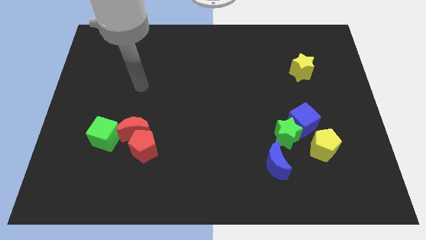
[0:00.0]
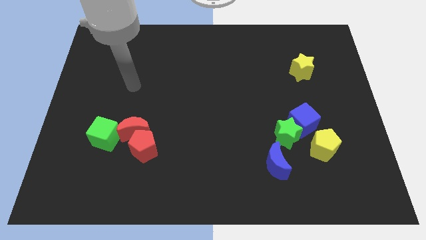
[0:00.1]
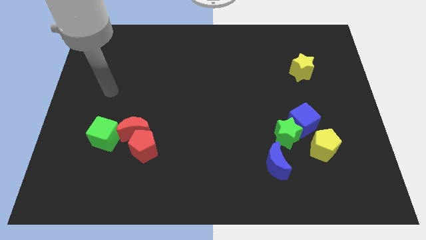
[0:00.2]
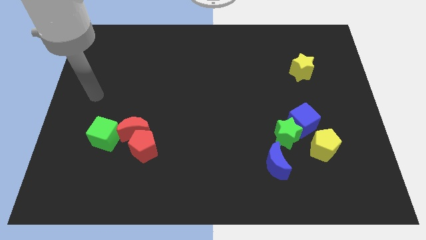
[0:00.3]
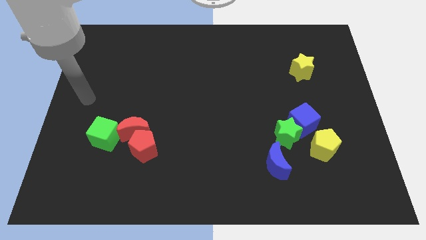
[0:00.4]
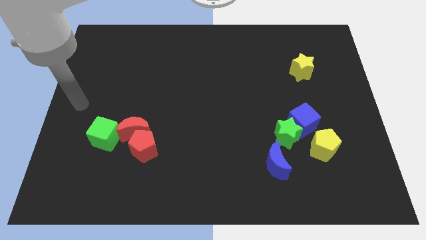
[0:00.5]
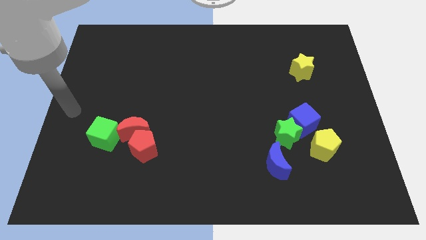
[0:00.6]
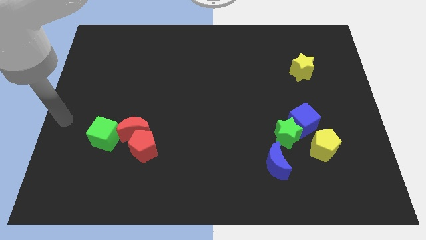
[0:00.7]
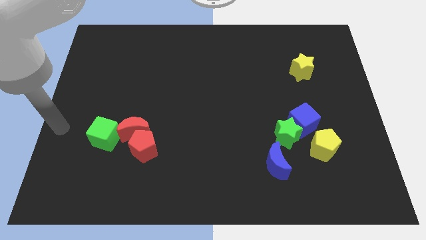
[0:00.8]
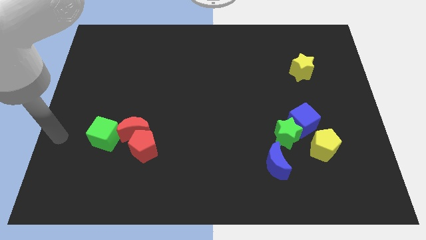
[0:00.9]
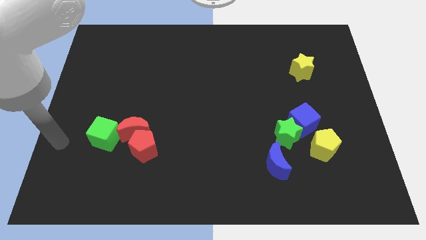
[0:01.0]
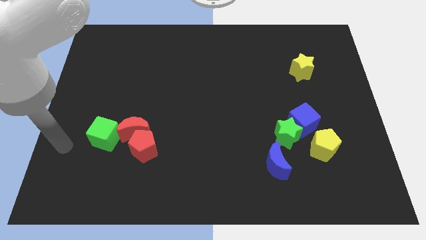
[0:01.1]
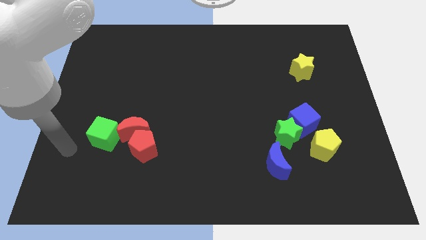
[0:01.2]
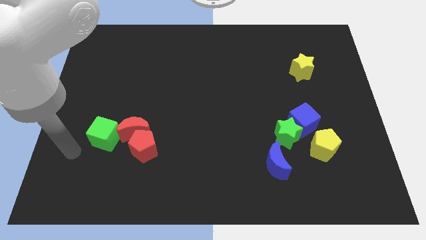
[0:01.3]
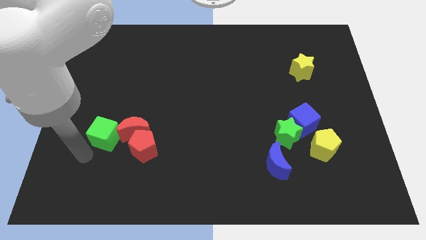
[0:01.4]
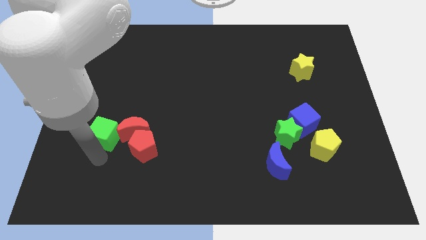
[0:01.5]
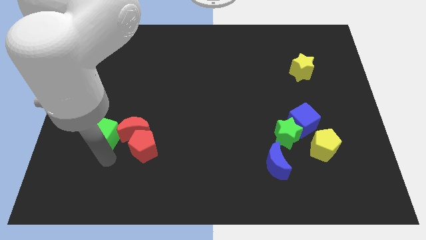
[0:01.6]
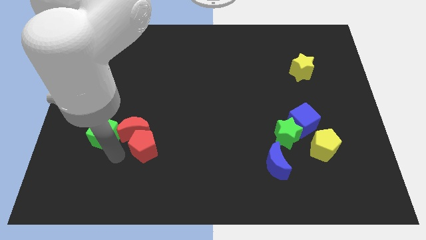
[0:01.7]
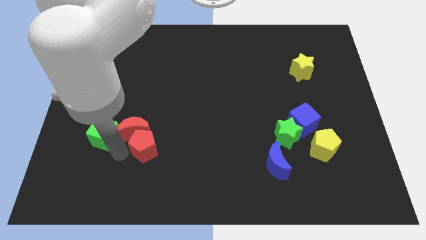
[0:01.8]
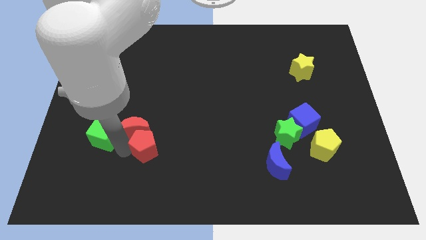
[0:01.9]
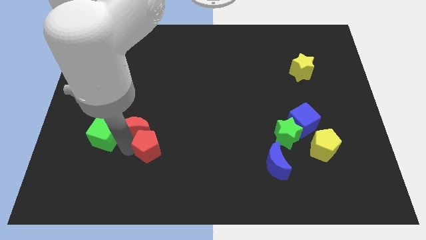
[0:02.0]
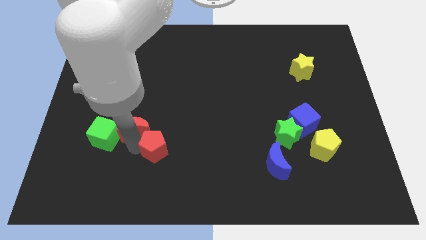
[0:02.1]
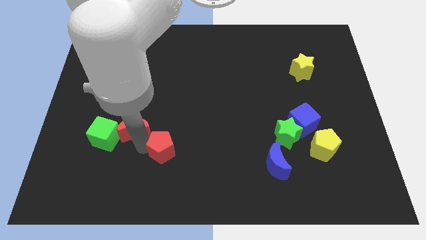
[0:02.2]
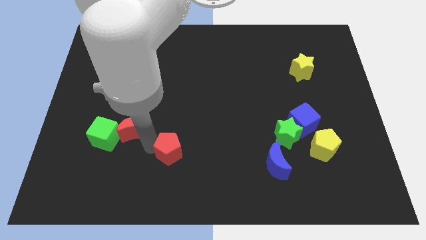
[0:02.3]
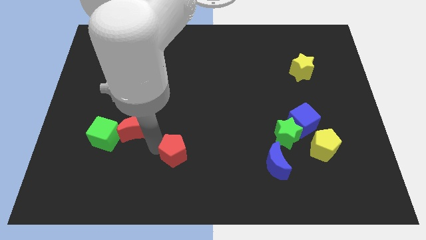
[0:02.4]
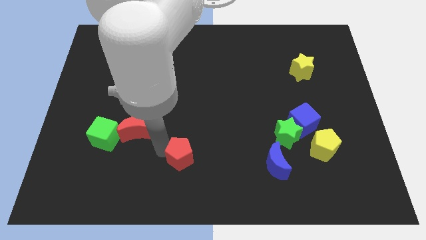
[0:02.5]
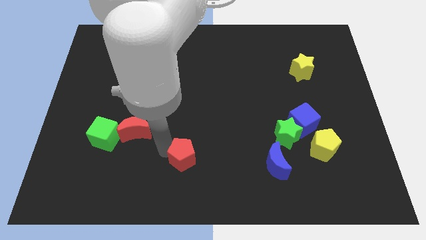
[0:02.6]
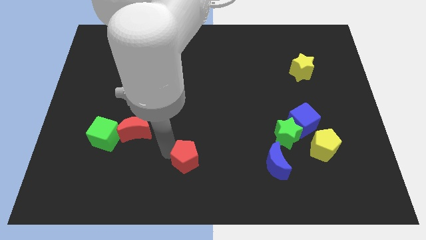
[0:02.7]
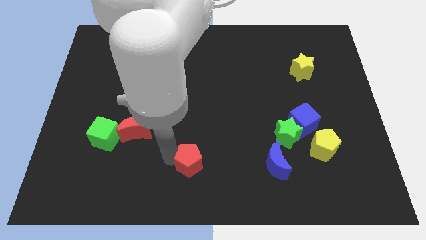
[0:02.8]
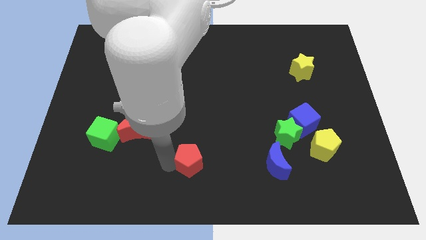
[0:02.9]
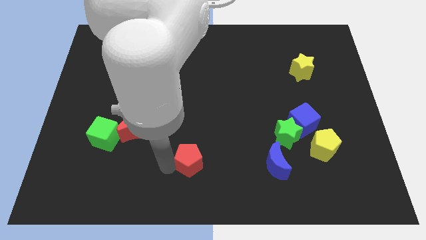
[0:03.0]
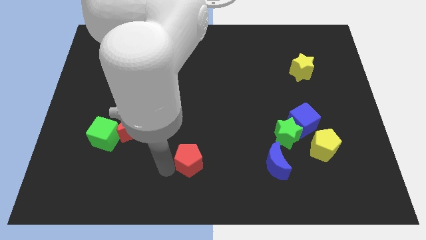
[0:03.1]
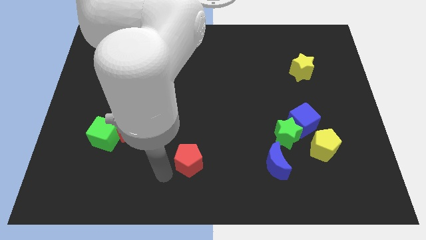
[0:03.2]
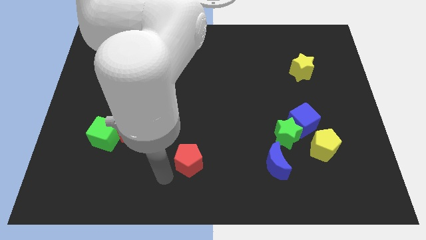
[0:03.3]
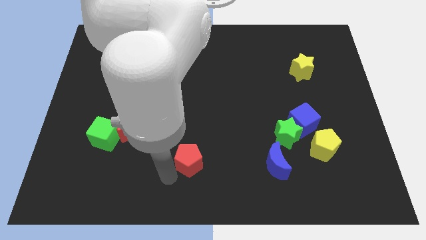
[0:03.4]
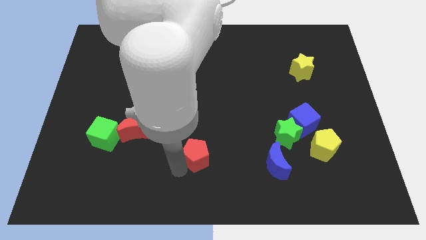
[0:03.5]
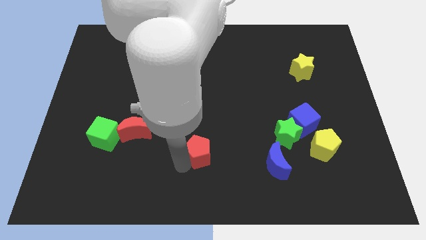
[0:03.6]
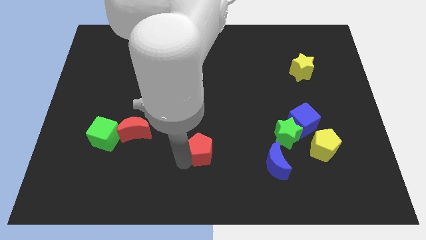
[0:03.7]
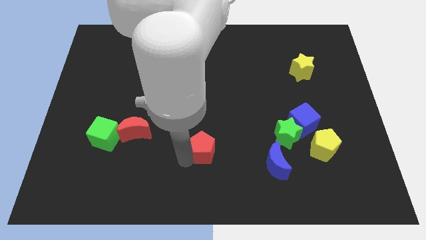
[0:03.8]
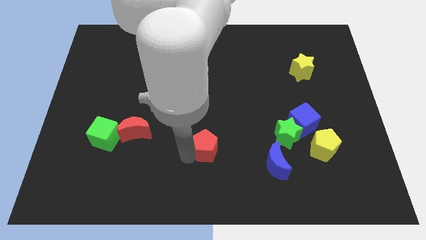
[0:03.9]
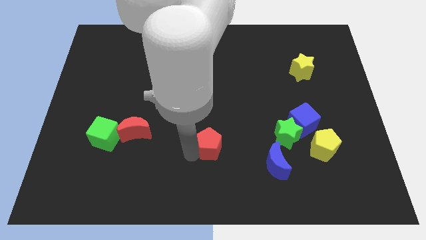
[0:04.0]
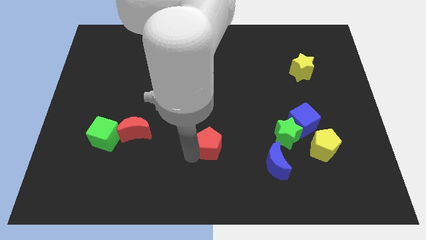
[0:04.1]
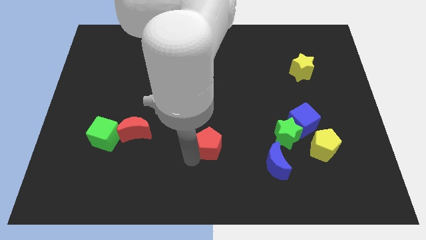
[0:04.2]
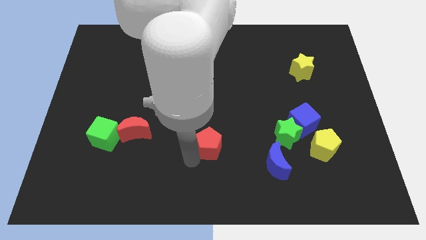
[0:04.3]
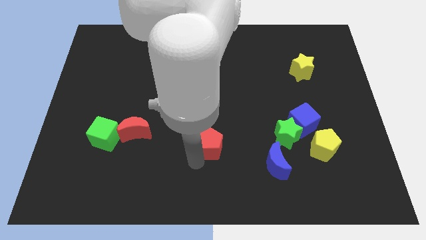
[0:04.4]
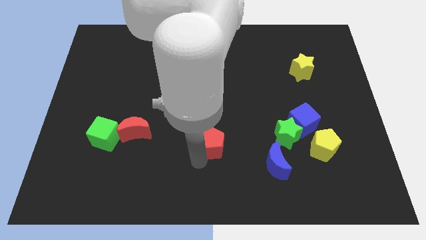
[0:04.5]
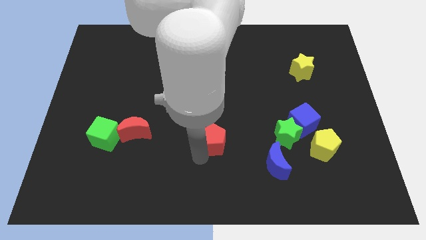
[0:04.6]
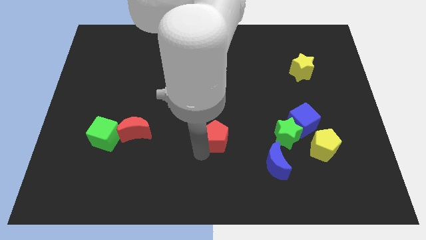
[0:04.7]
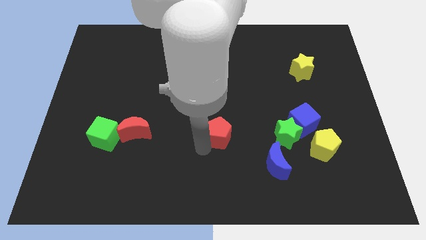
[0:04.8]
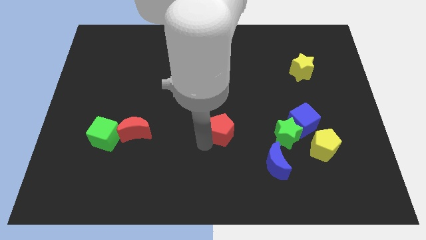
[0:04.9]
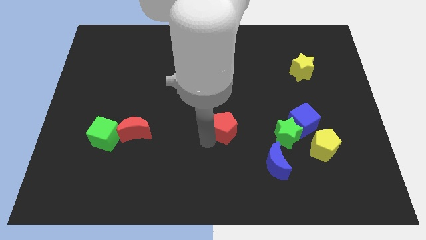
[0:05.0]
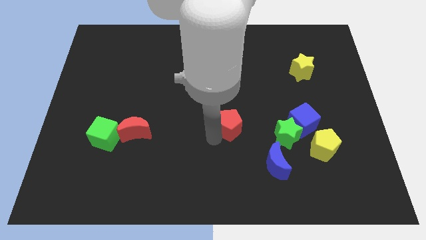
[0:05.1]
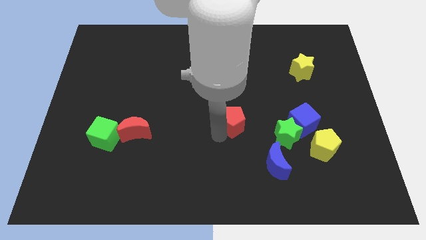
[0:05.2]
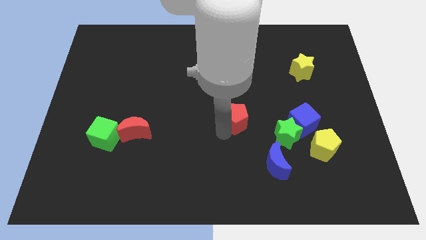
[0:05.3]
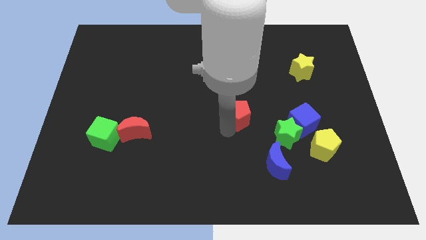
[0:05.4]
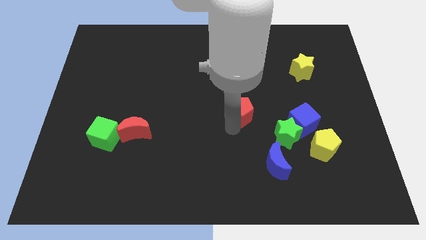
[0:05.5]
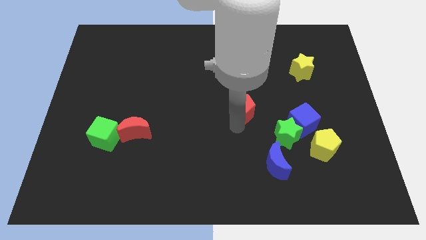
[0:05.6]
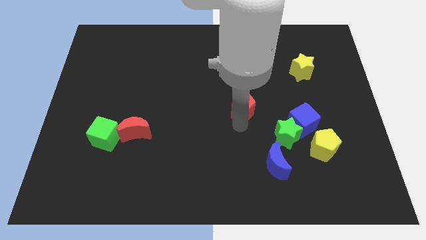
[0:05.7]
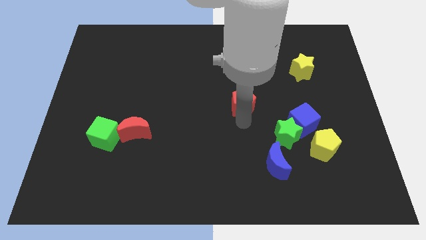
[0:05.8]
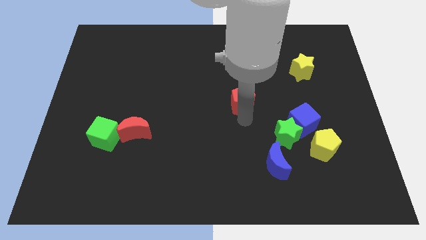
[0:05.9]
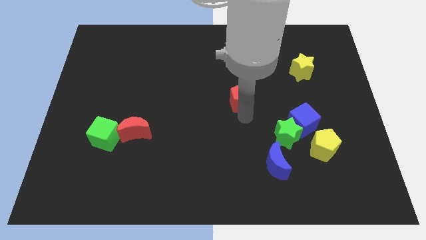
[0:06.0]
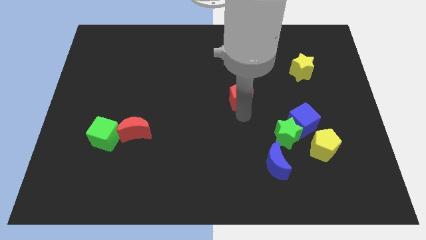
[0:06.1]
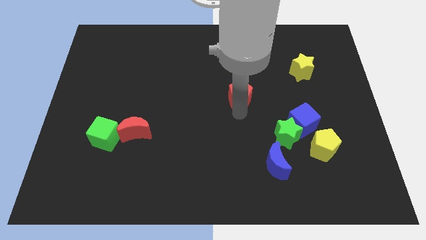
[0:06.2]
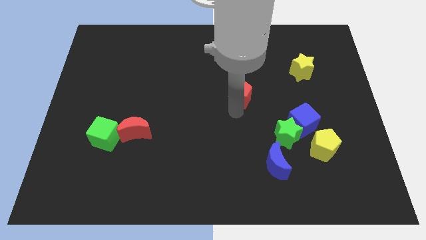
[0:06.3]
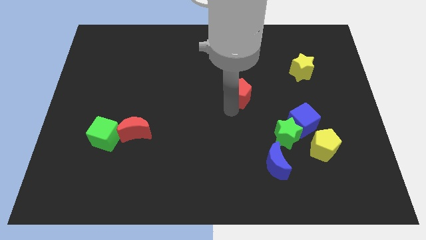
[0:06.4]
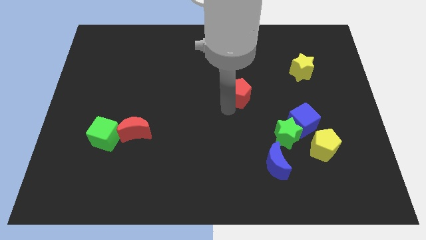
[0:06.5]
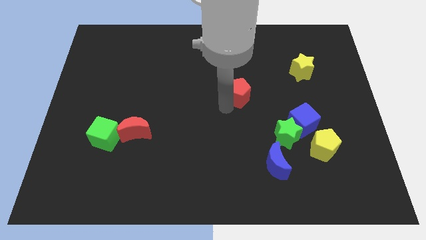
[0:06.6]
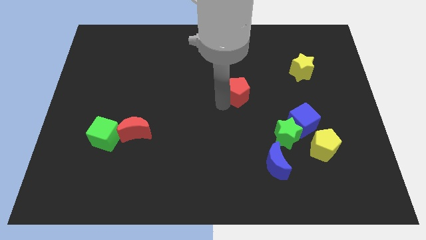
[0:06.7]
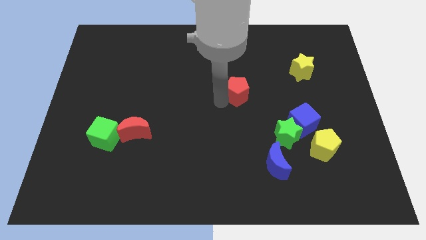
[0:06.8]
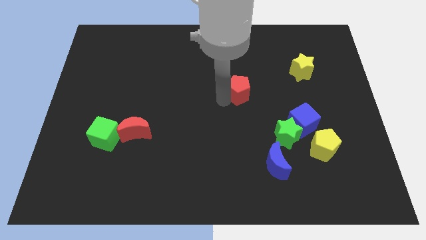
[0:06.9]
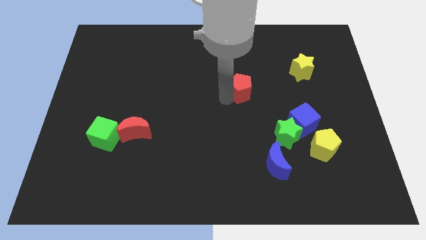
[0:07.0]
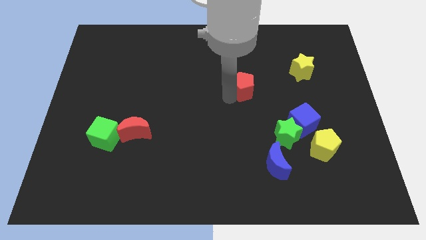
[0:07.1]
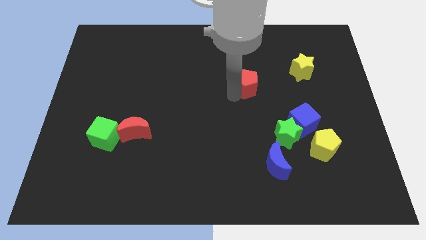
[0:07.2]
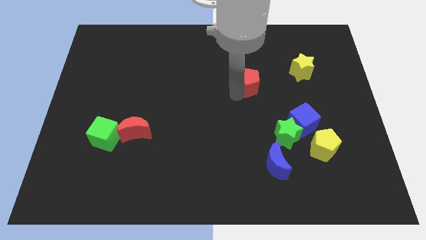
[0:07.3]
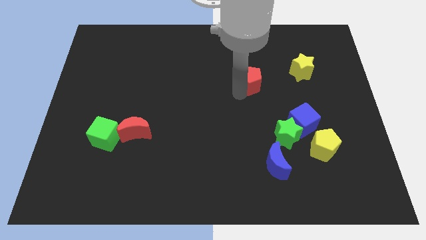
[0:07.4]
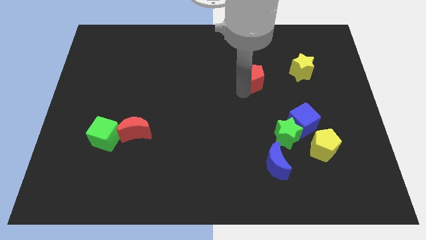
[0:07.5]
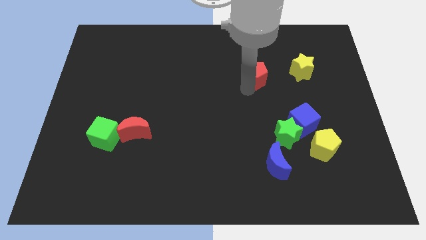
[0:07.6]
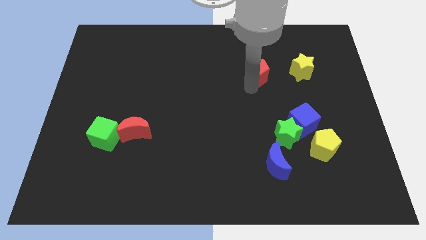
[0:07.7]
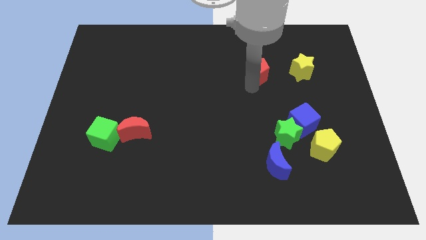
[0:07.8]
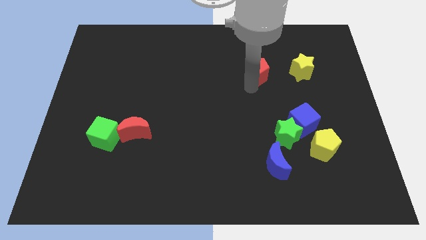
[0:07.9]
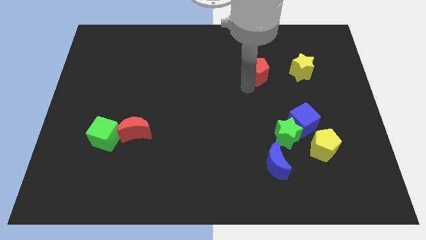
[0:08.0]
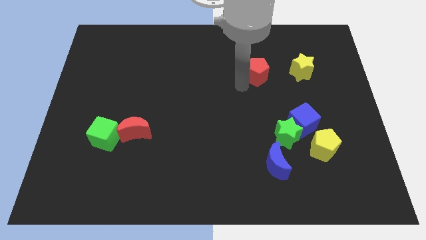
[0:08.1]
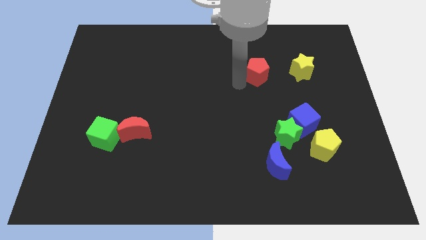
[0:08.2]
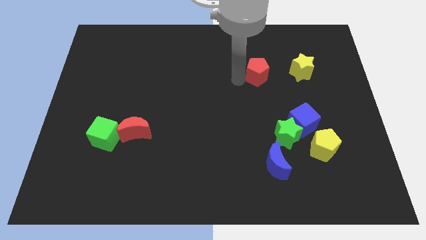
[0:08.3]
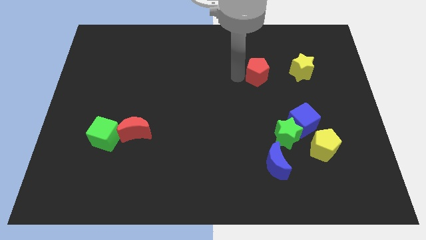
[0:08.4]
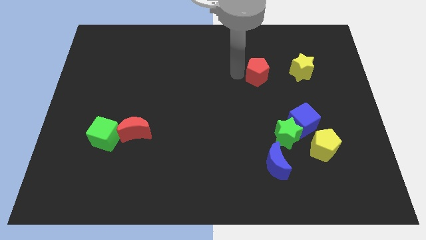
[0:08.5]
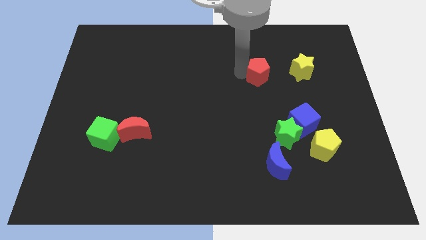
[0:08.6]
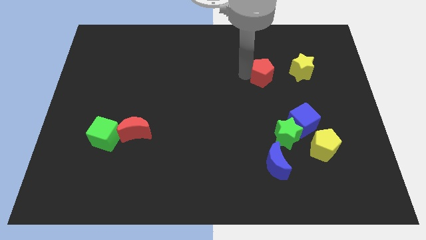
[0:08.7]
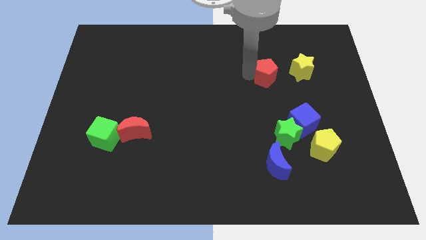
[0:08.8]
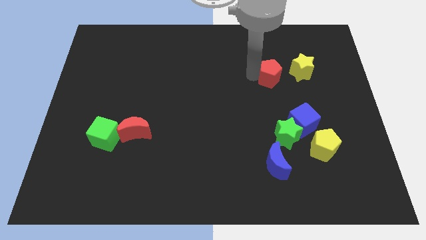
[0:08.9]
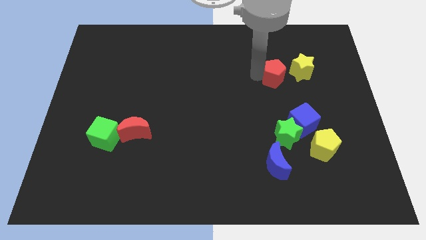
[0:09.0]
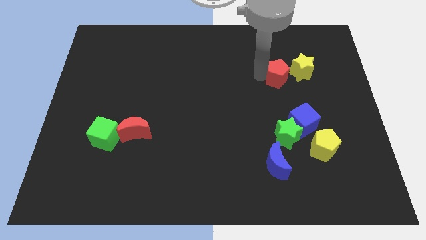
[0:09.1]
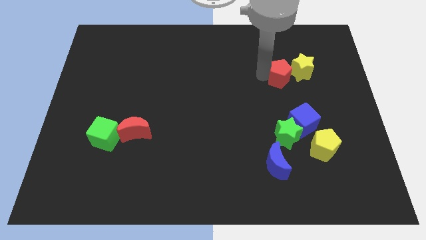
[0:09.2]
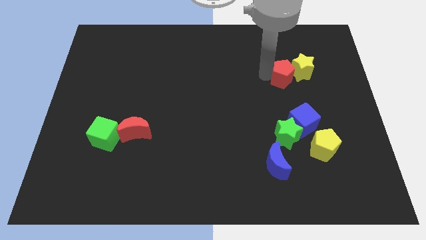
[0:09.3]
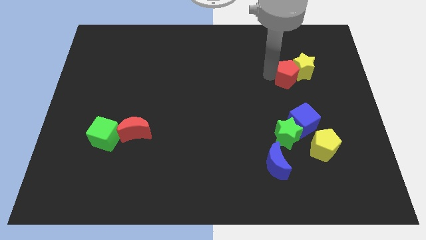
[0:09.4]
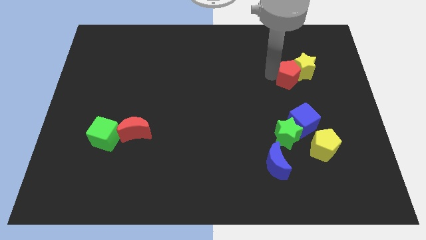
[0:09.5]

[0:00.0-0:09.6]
slide the red pentagon close to the yellow star
